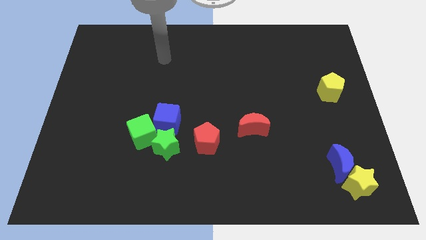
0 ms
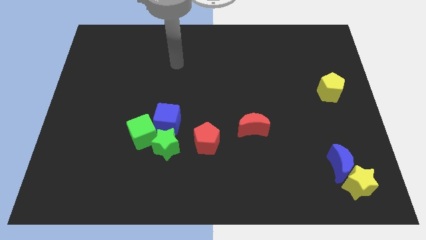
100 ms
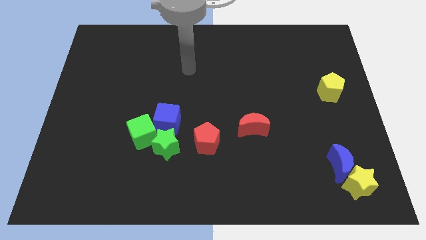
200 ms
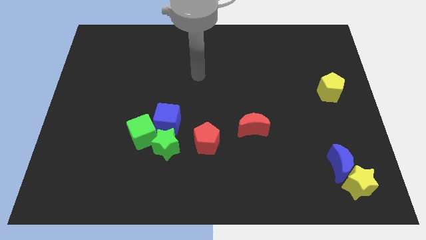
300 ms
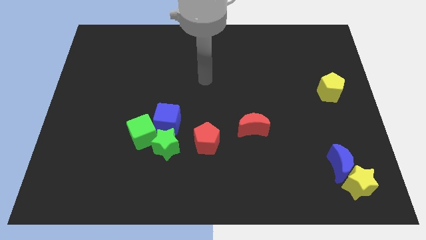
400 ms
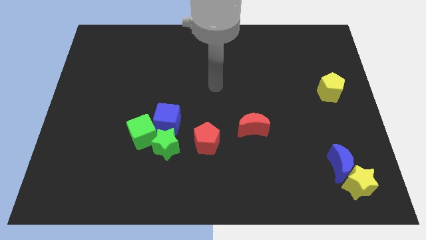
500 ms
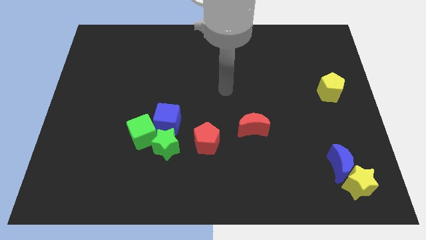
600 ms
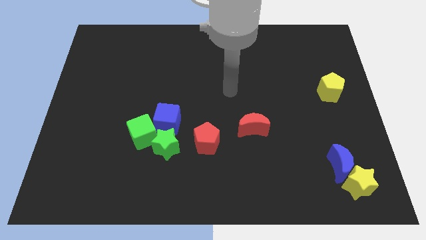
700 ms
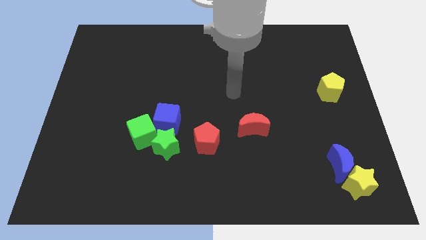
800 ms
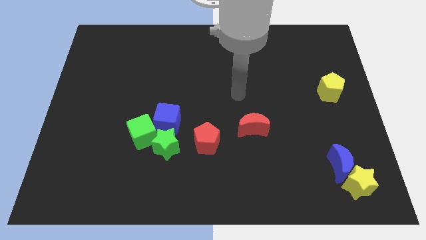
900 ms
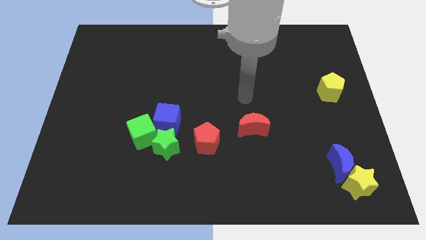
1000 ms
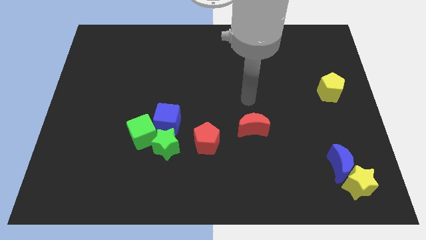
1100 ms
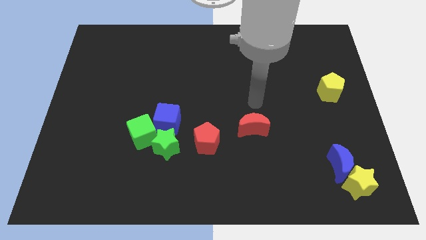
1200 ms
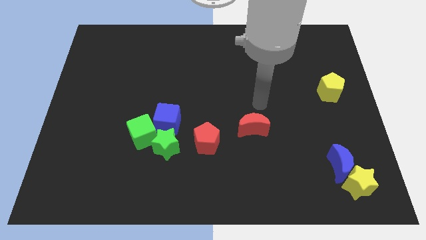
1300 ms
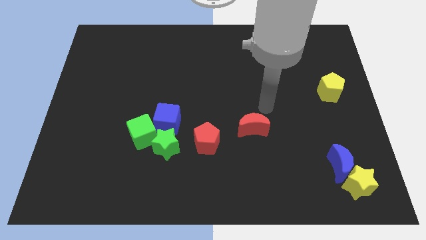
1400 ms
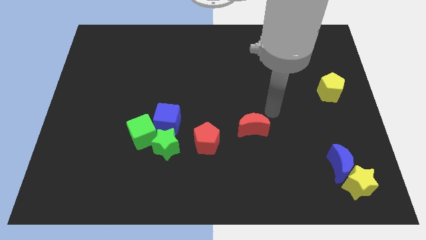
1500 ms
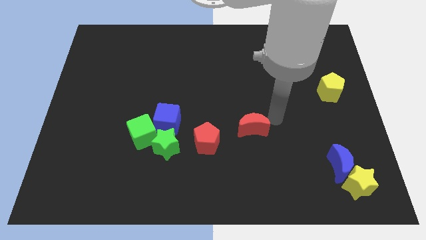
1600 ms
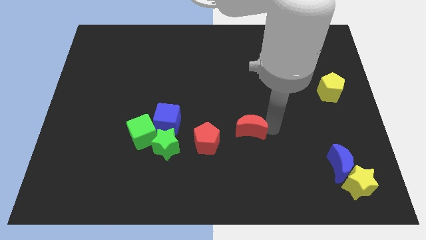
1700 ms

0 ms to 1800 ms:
touch the red moon

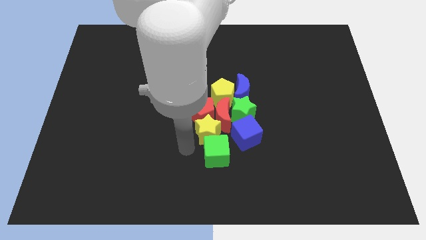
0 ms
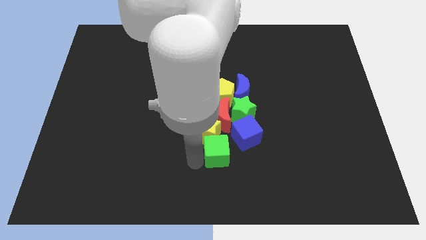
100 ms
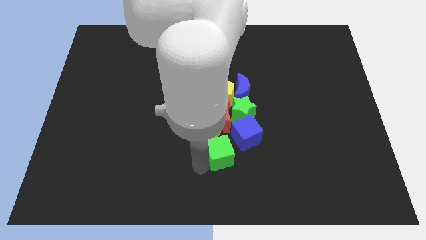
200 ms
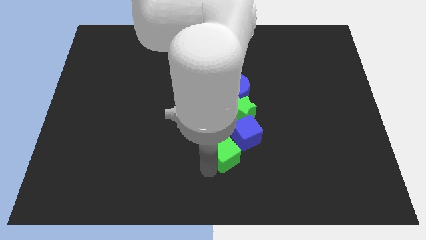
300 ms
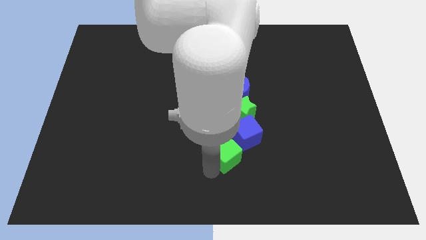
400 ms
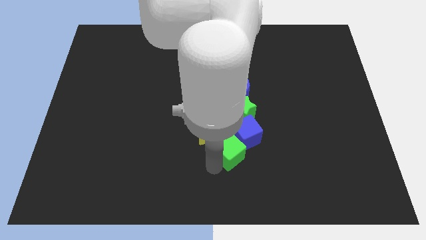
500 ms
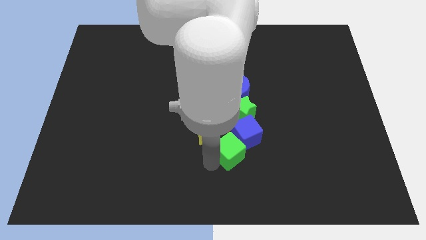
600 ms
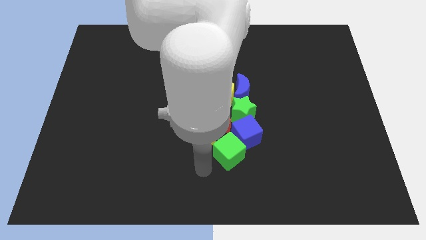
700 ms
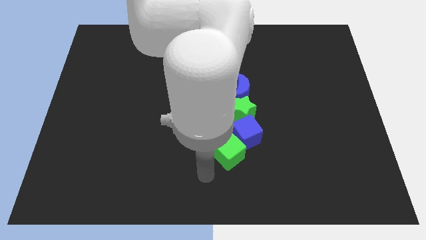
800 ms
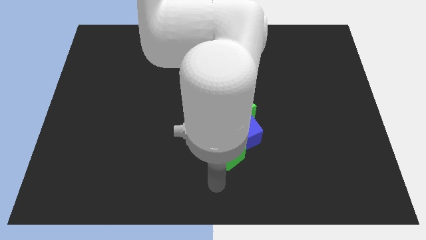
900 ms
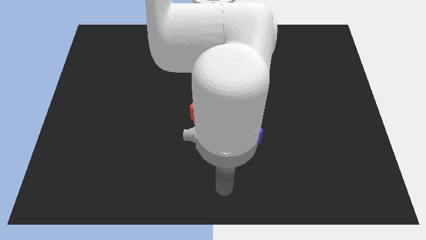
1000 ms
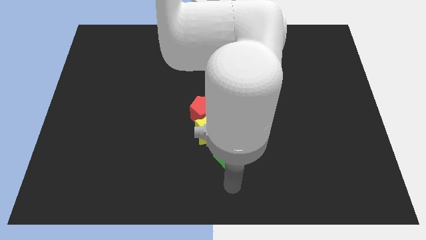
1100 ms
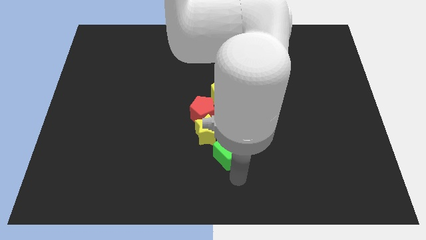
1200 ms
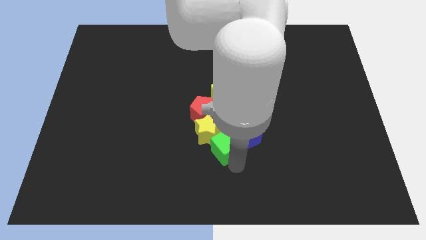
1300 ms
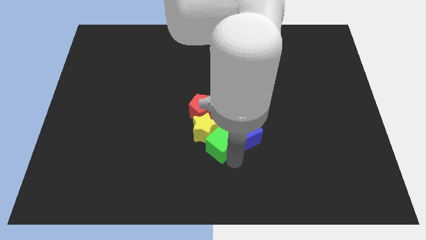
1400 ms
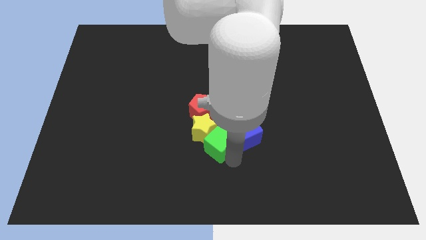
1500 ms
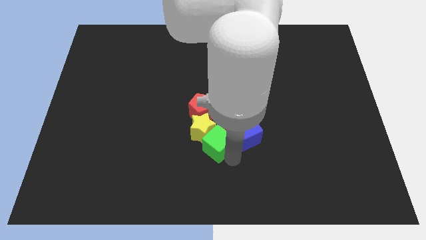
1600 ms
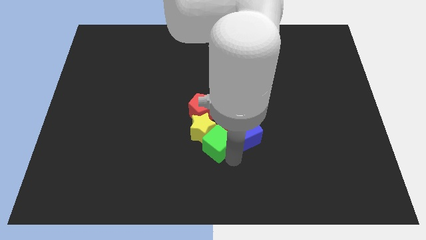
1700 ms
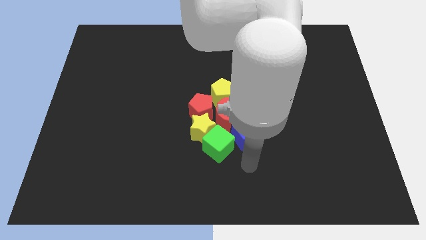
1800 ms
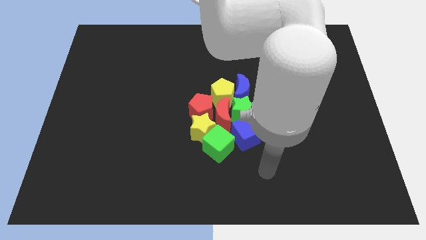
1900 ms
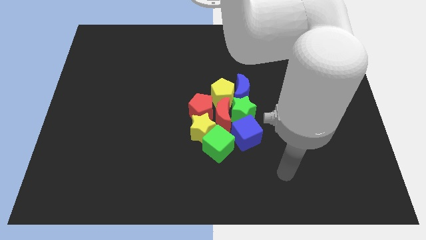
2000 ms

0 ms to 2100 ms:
push the green cube into the yellow star

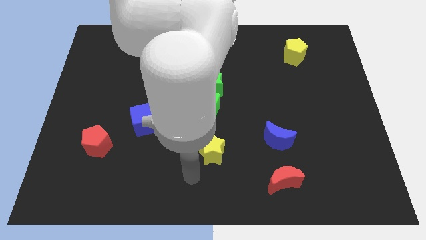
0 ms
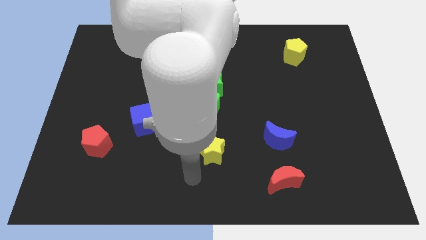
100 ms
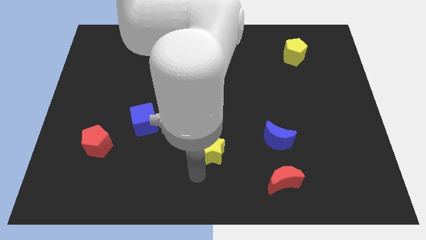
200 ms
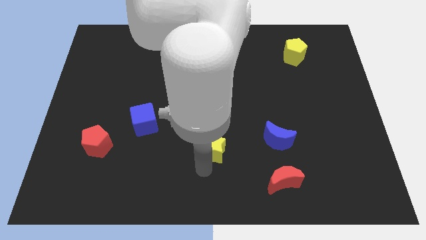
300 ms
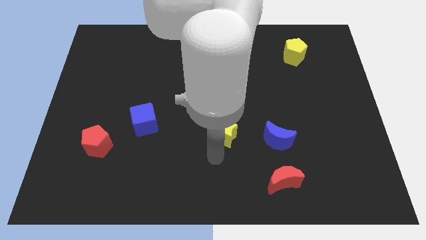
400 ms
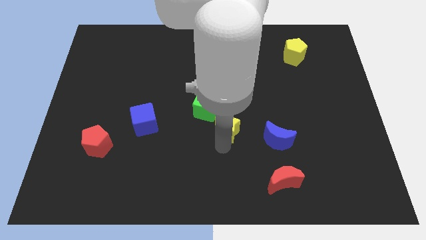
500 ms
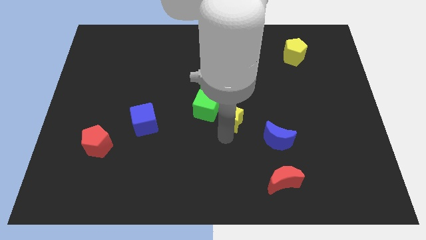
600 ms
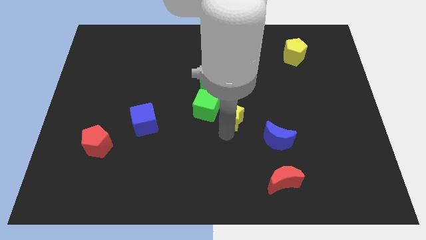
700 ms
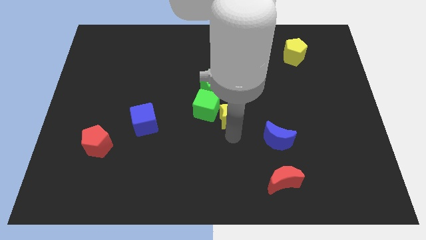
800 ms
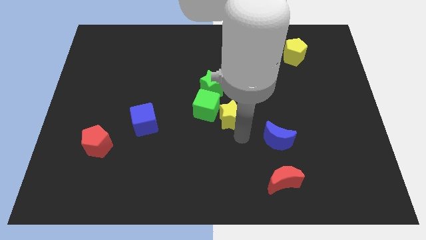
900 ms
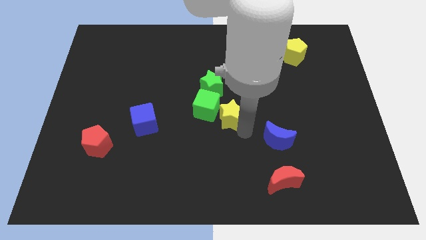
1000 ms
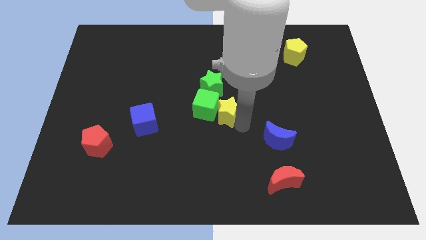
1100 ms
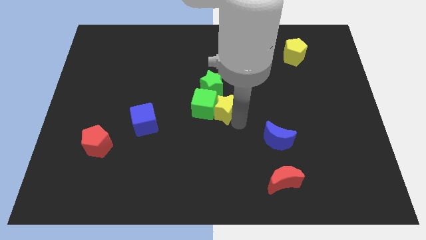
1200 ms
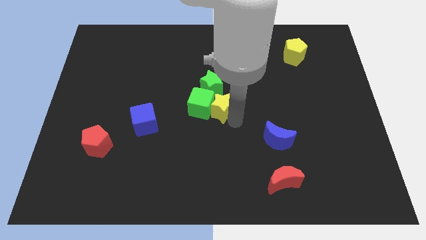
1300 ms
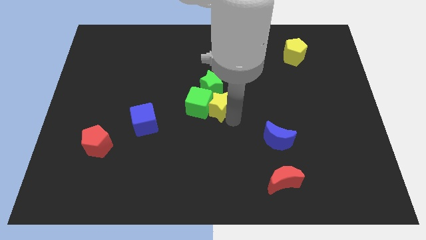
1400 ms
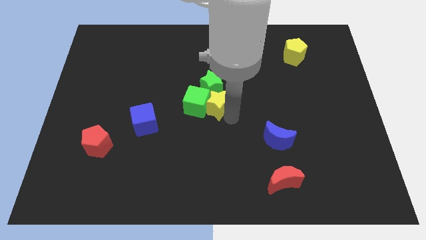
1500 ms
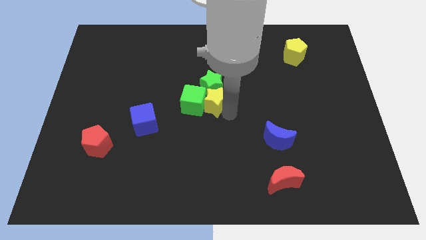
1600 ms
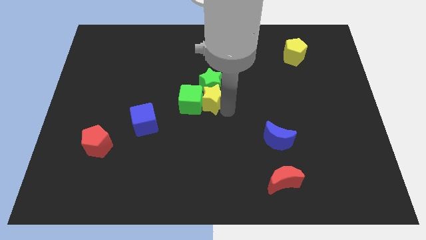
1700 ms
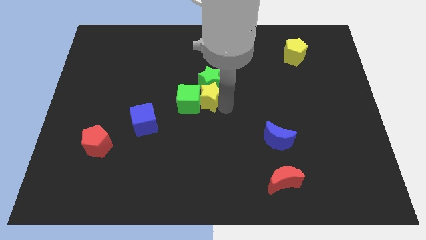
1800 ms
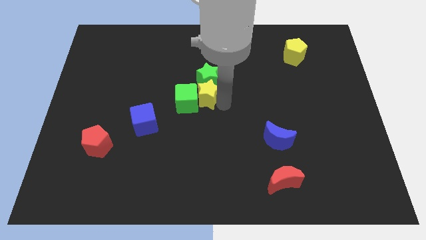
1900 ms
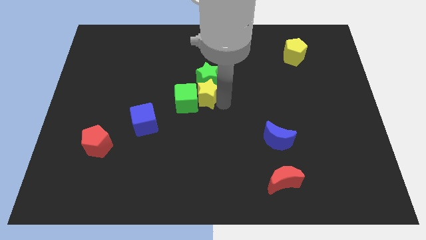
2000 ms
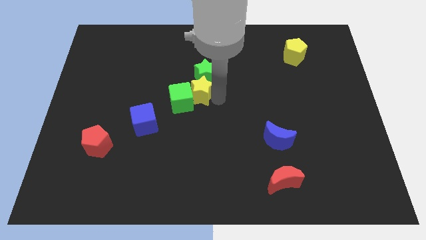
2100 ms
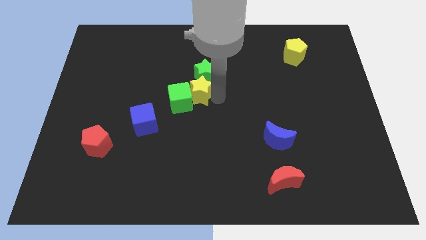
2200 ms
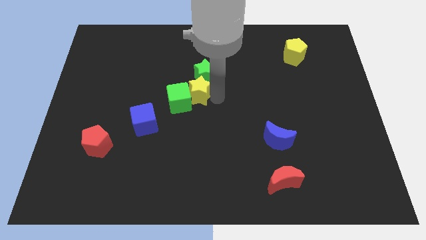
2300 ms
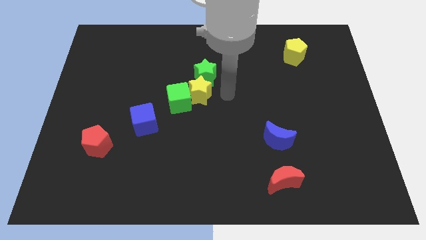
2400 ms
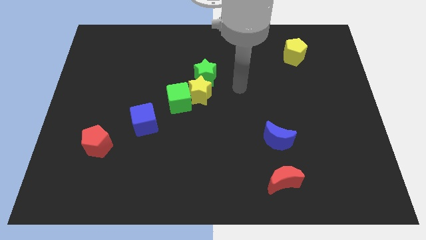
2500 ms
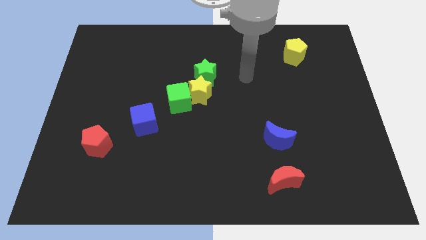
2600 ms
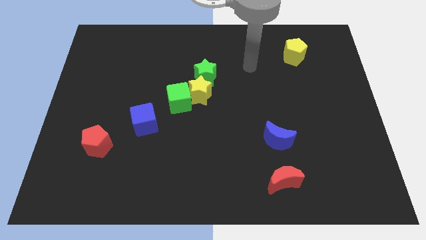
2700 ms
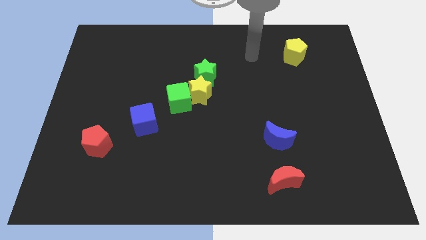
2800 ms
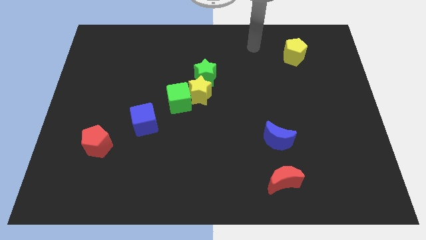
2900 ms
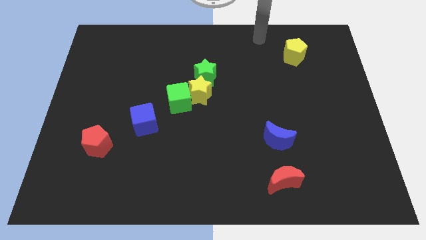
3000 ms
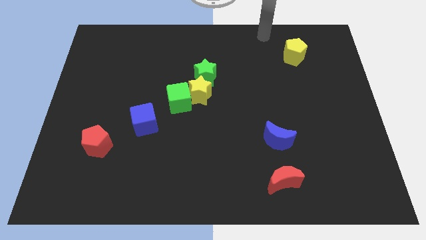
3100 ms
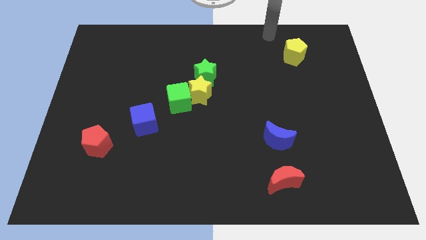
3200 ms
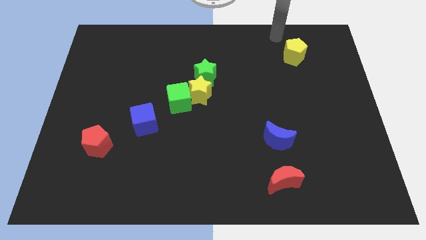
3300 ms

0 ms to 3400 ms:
push the yellow star to the top right side of the green cube

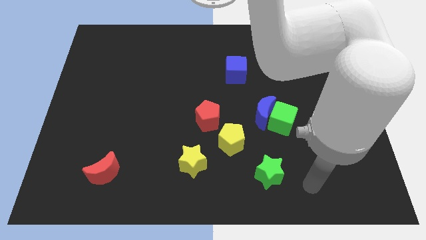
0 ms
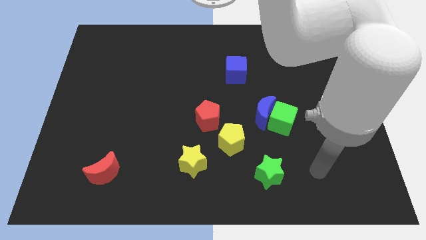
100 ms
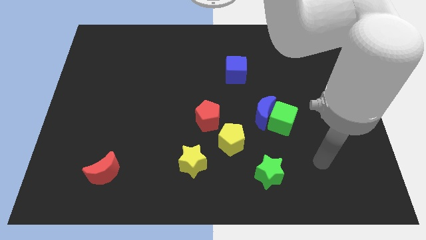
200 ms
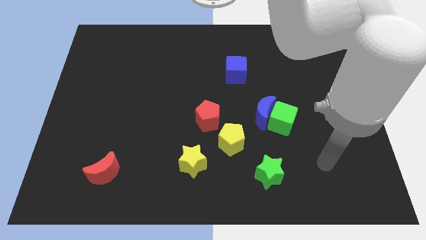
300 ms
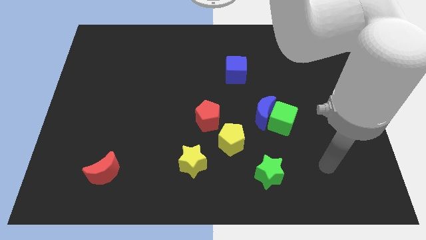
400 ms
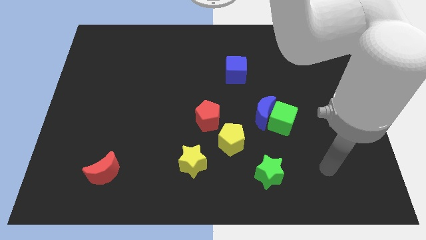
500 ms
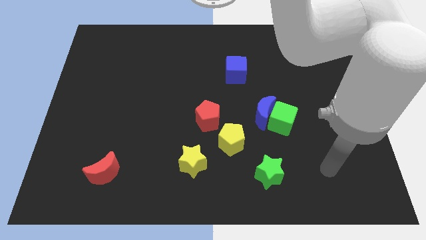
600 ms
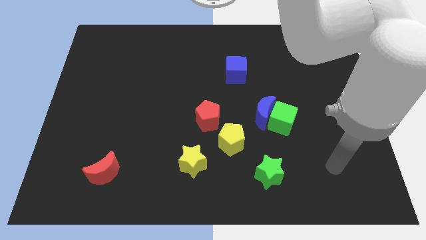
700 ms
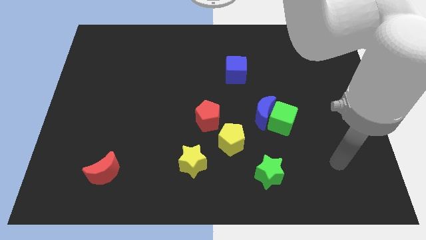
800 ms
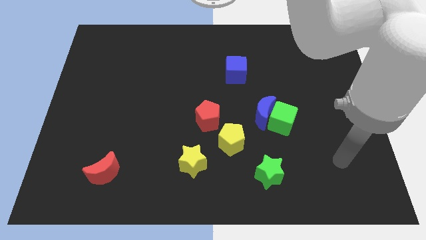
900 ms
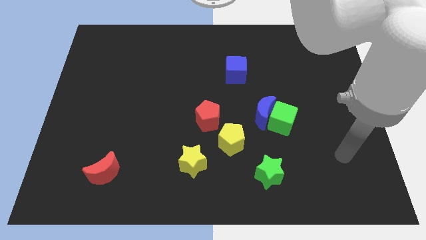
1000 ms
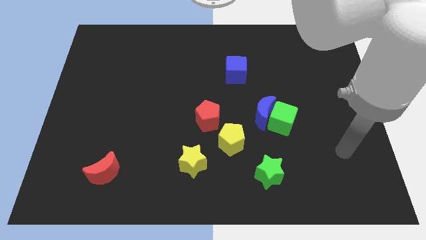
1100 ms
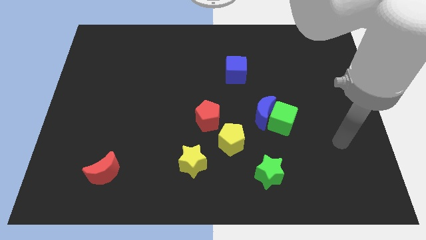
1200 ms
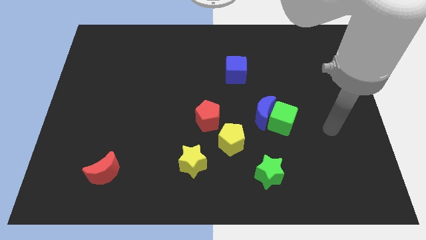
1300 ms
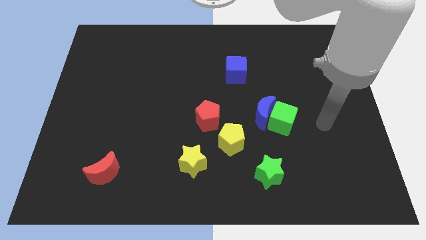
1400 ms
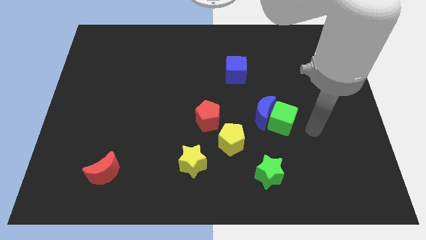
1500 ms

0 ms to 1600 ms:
point your arm at the right side of the green cube
